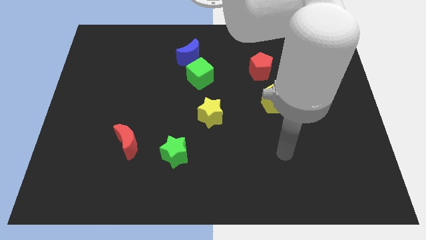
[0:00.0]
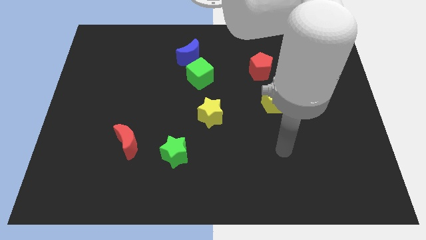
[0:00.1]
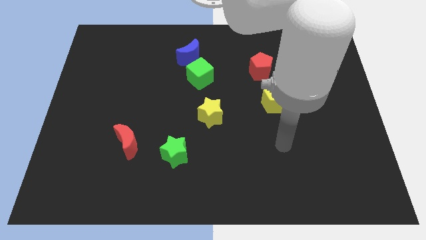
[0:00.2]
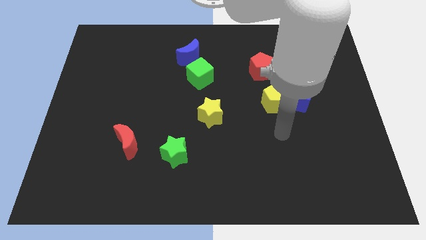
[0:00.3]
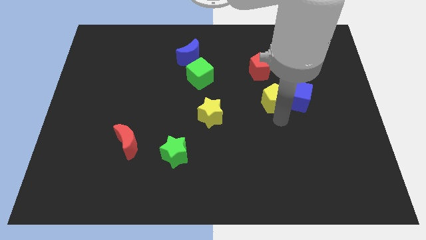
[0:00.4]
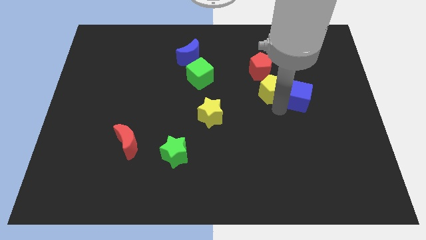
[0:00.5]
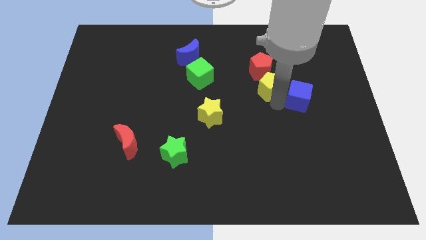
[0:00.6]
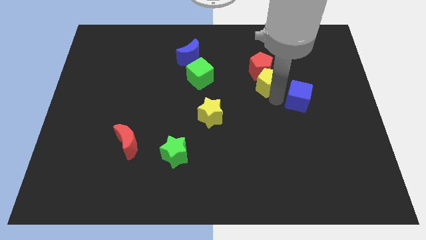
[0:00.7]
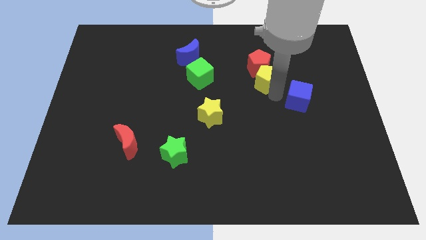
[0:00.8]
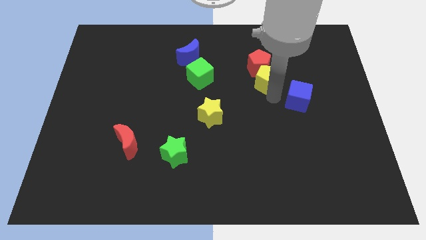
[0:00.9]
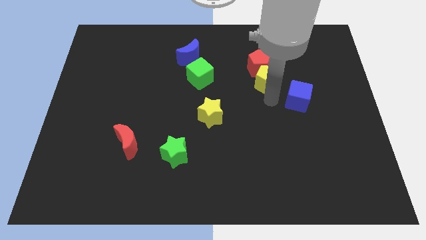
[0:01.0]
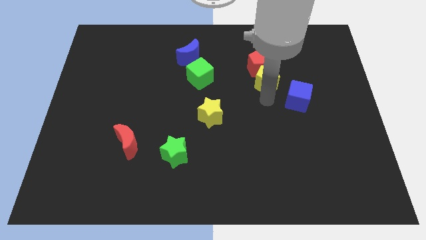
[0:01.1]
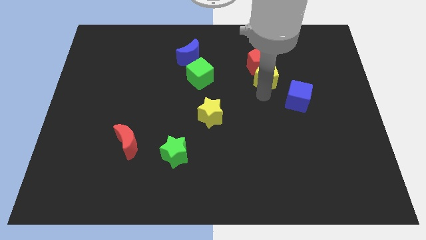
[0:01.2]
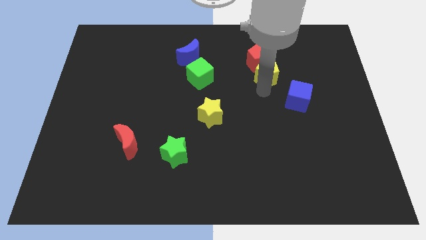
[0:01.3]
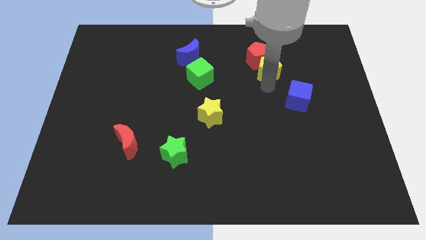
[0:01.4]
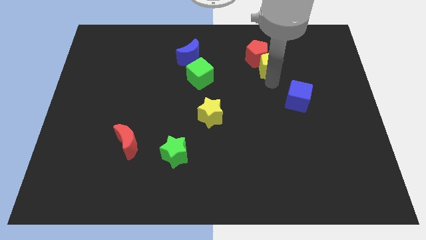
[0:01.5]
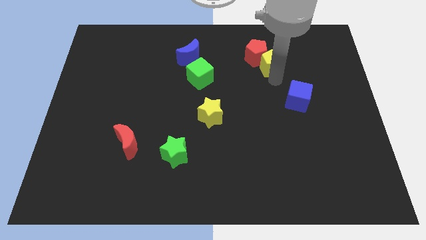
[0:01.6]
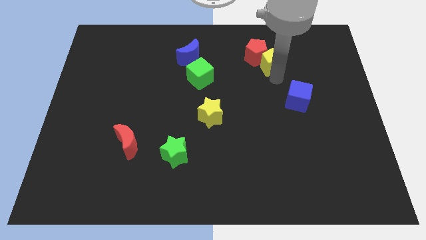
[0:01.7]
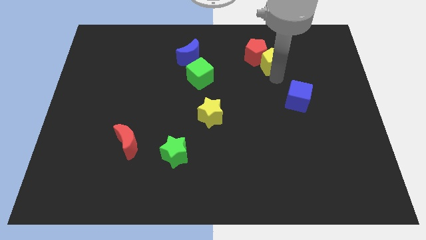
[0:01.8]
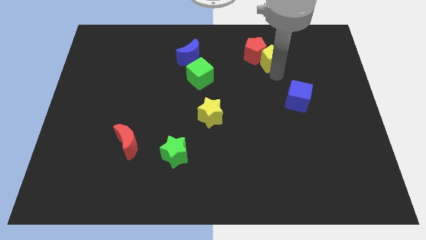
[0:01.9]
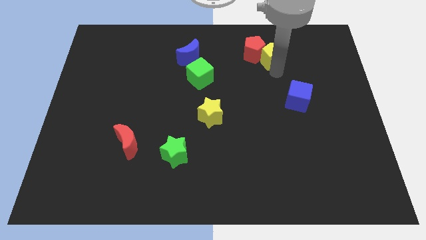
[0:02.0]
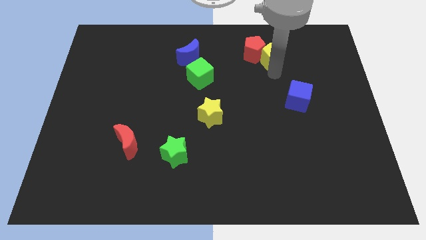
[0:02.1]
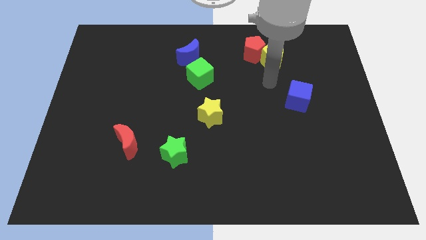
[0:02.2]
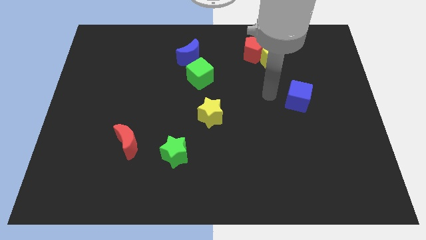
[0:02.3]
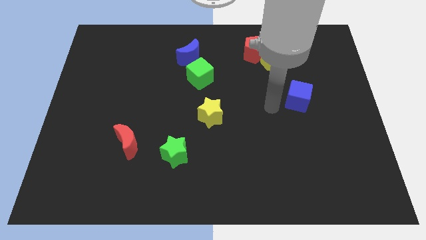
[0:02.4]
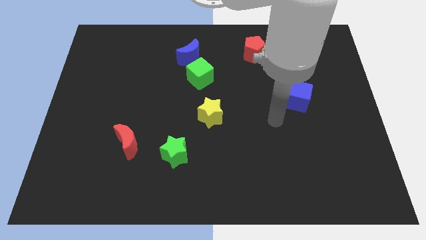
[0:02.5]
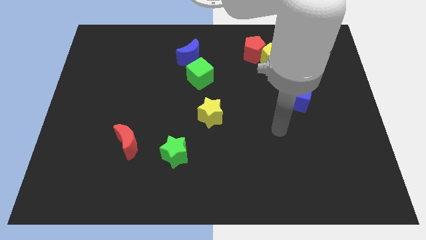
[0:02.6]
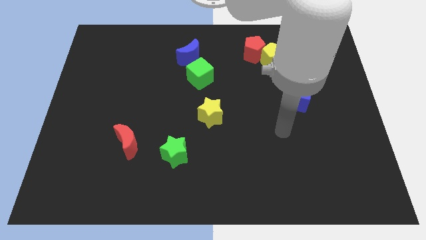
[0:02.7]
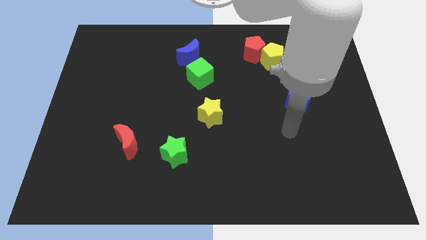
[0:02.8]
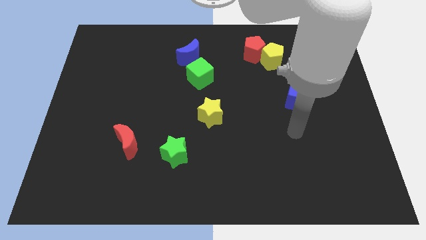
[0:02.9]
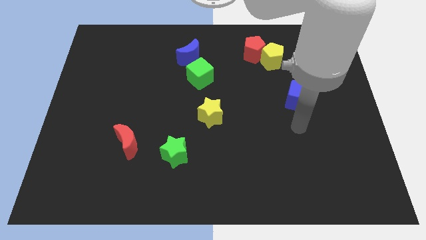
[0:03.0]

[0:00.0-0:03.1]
push the yellow pentagon into the red pentagon

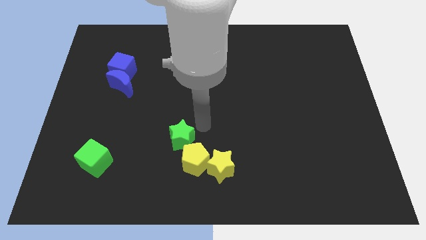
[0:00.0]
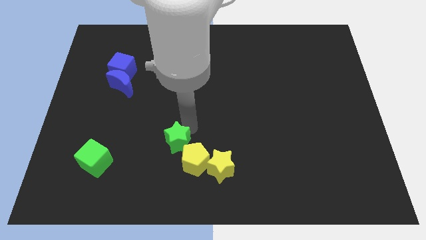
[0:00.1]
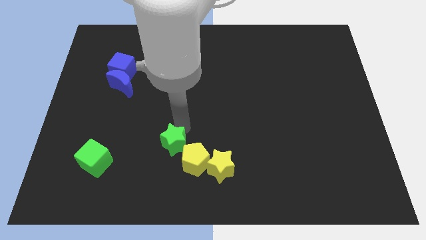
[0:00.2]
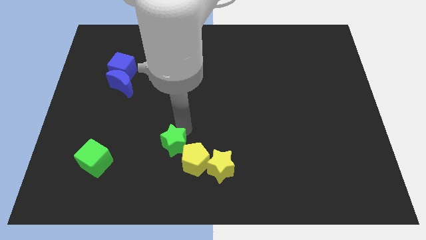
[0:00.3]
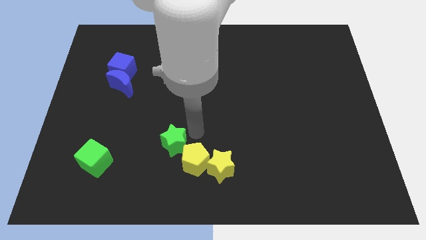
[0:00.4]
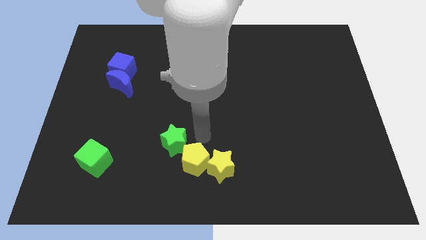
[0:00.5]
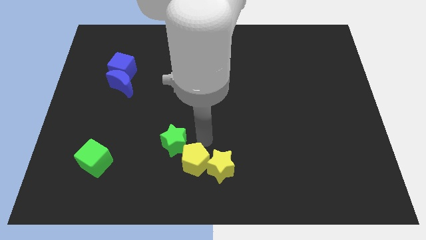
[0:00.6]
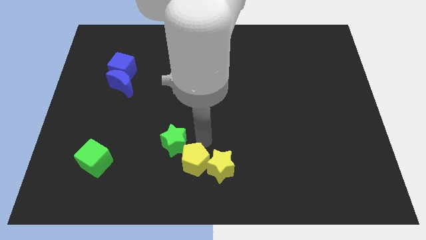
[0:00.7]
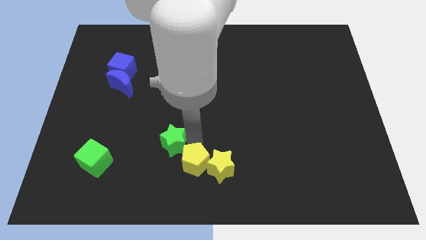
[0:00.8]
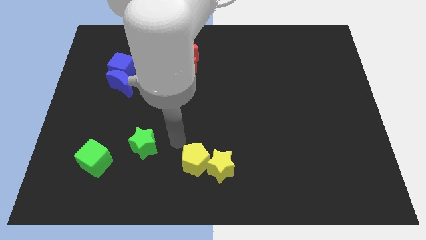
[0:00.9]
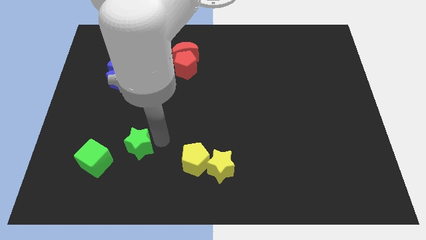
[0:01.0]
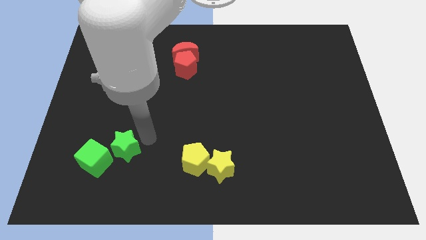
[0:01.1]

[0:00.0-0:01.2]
push the green star towards the green cube

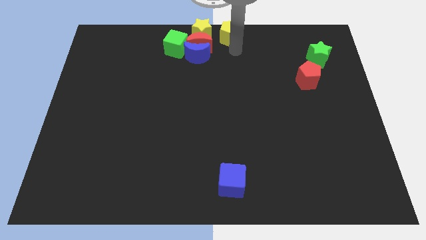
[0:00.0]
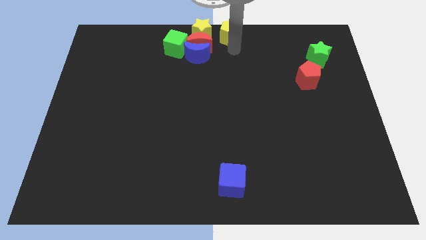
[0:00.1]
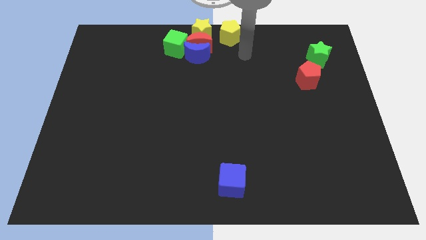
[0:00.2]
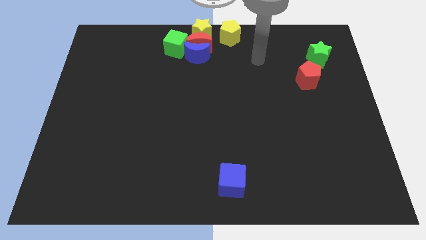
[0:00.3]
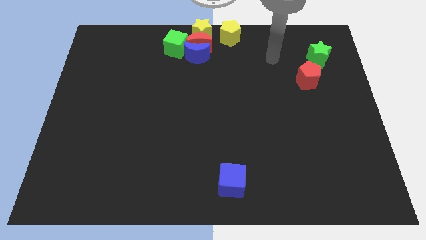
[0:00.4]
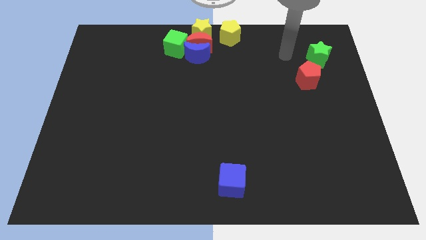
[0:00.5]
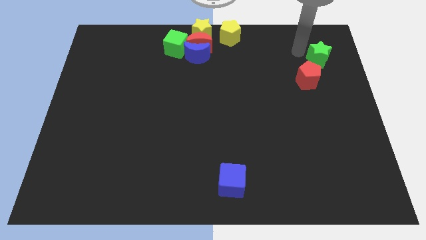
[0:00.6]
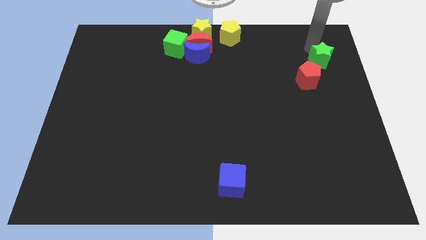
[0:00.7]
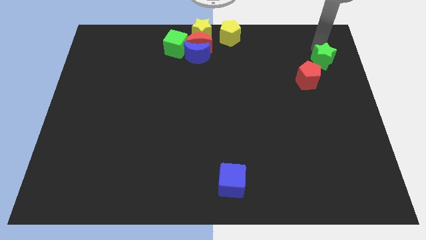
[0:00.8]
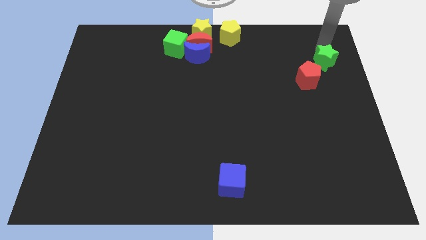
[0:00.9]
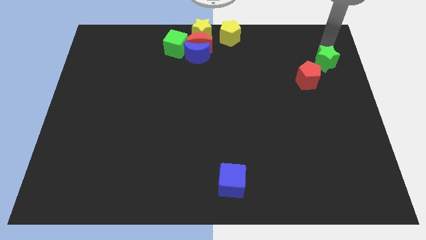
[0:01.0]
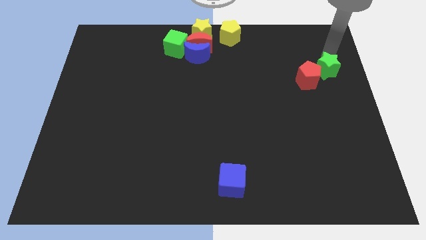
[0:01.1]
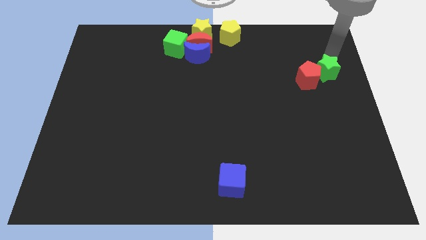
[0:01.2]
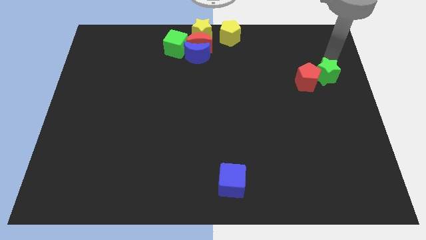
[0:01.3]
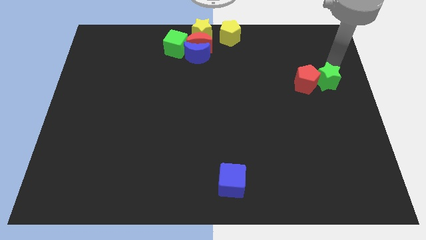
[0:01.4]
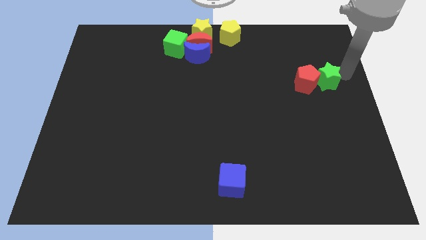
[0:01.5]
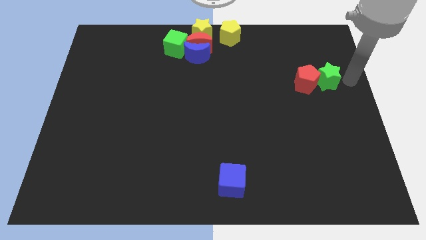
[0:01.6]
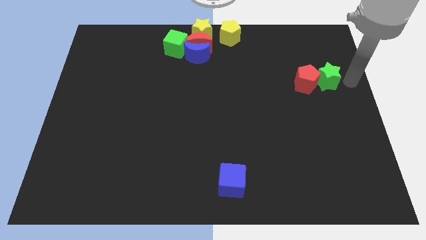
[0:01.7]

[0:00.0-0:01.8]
place the green star right to the red pentagon

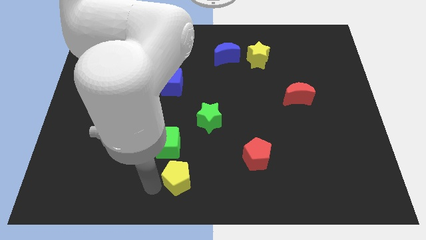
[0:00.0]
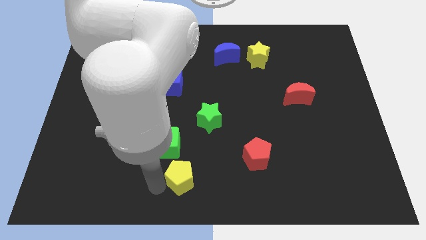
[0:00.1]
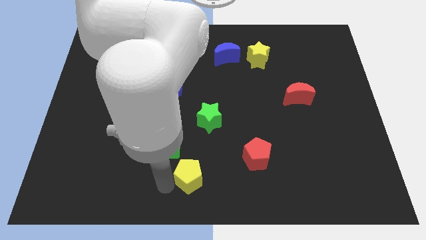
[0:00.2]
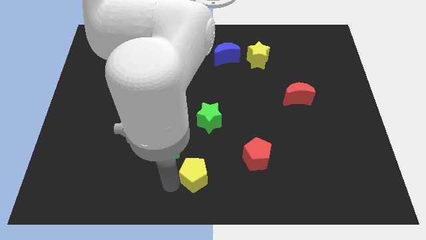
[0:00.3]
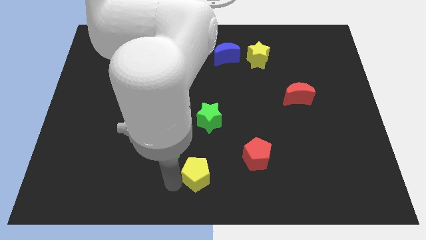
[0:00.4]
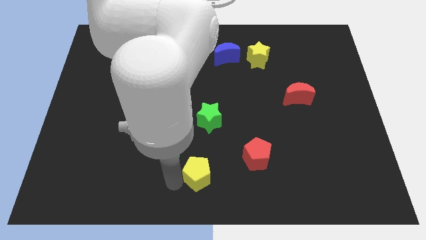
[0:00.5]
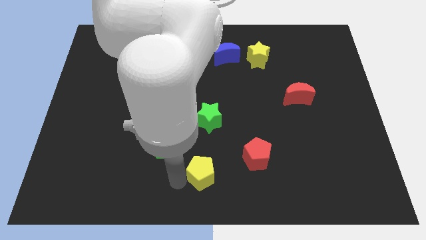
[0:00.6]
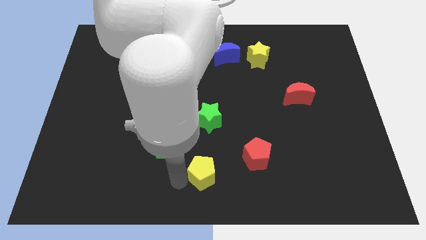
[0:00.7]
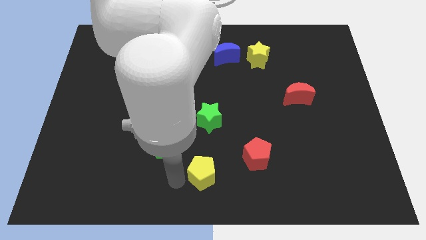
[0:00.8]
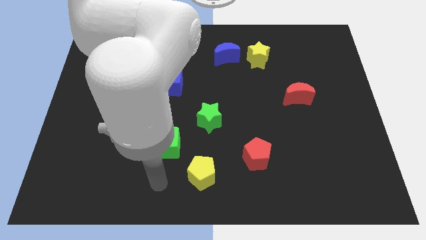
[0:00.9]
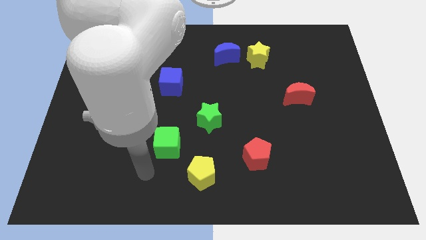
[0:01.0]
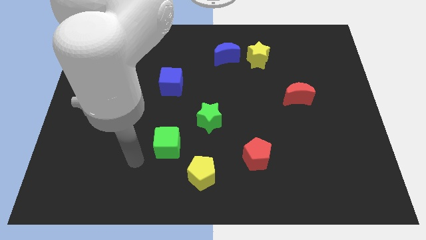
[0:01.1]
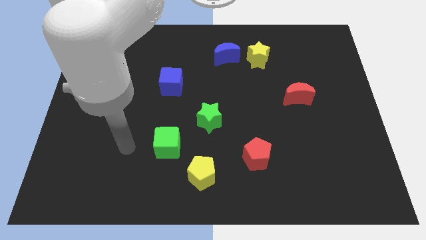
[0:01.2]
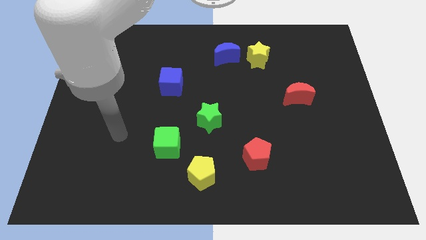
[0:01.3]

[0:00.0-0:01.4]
move the yellow pentagon slightly to left of the red pentagon

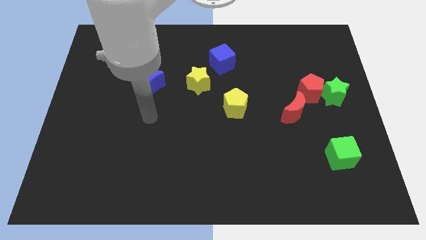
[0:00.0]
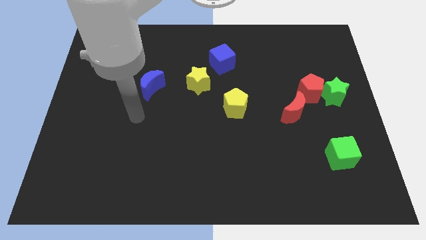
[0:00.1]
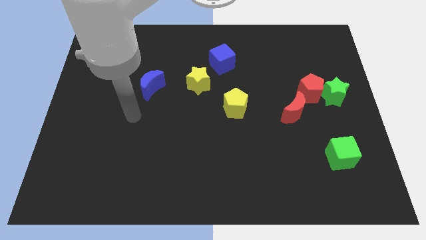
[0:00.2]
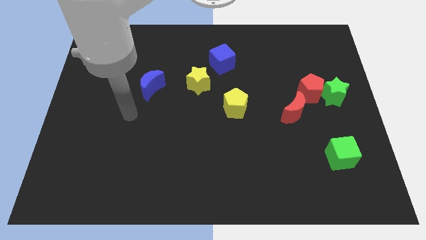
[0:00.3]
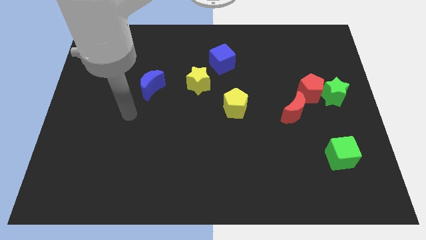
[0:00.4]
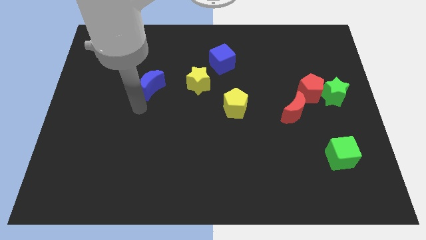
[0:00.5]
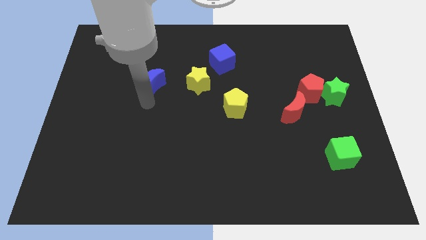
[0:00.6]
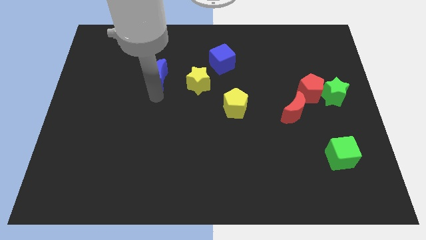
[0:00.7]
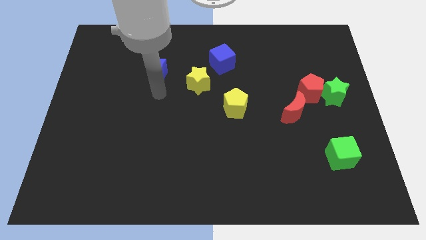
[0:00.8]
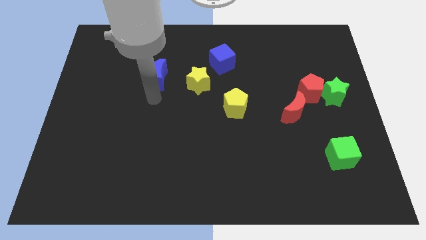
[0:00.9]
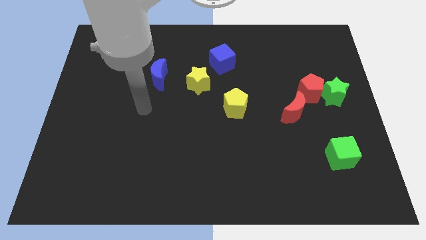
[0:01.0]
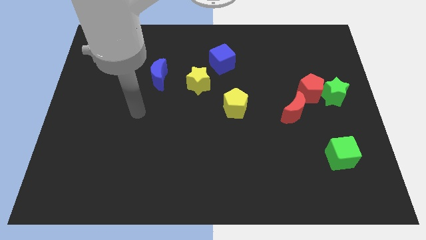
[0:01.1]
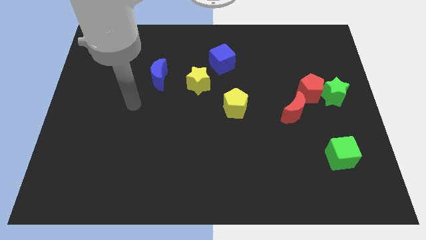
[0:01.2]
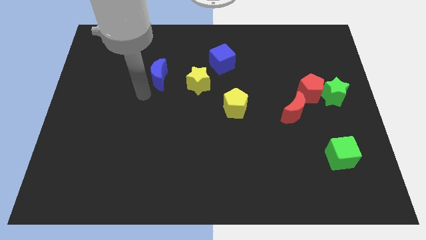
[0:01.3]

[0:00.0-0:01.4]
place blue crescent to the left side of the yellow star

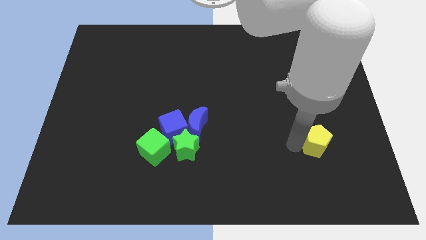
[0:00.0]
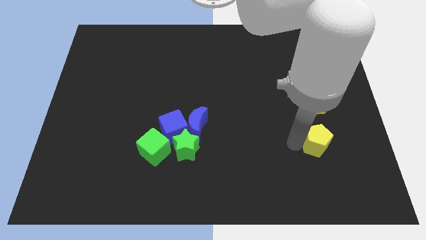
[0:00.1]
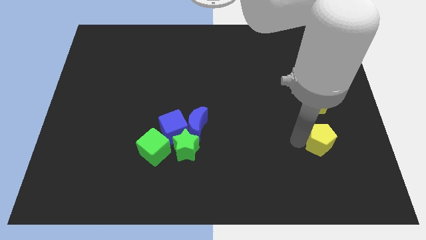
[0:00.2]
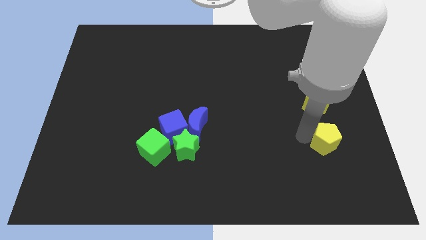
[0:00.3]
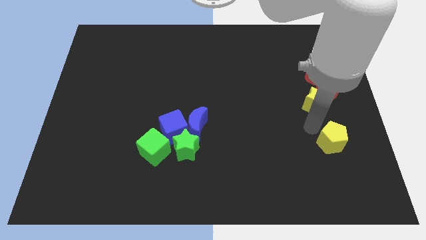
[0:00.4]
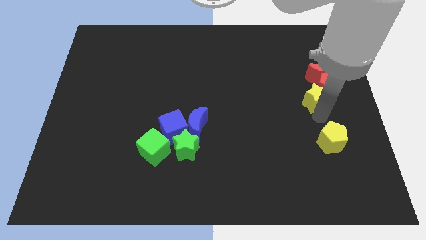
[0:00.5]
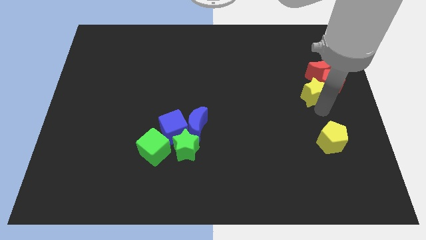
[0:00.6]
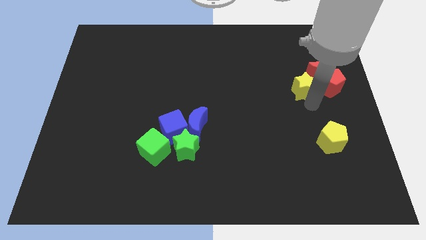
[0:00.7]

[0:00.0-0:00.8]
separate the yellow blocks
